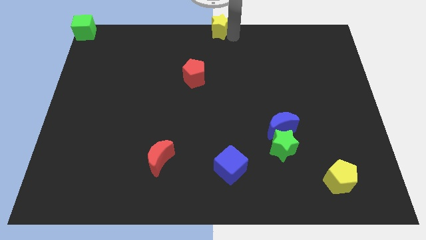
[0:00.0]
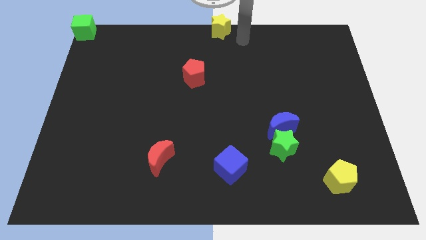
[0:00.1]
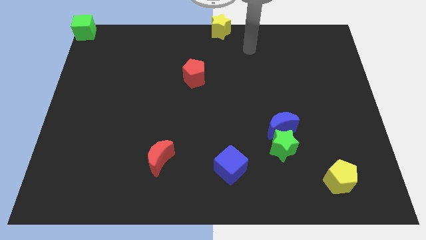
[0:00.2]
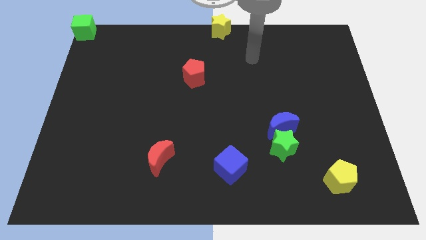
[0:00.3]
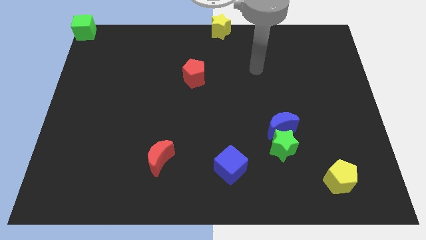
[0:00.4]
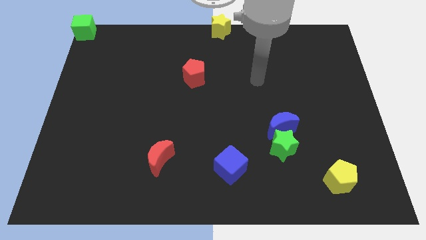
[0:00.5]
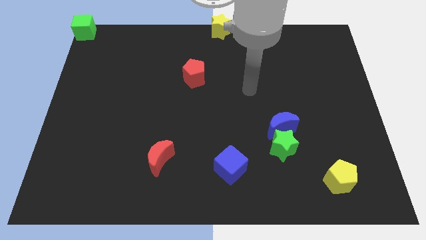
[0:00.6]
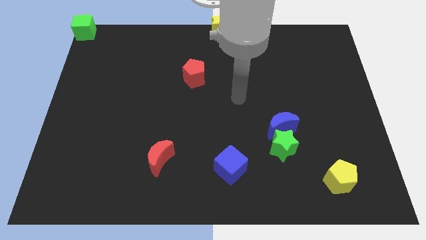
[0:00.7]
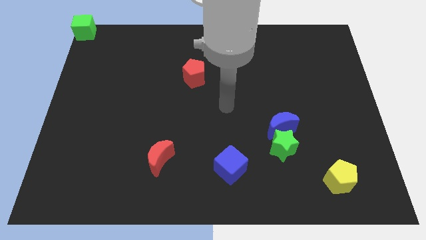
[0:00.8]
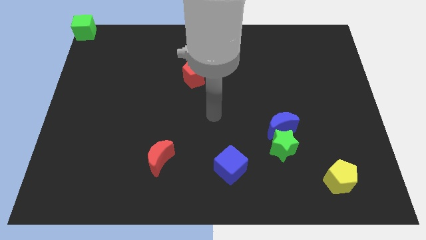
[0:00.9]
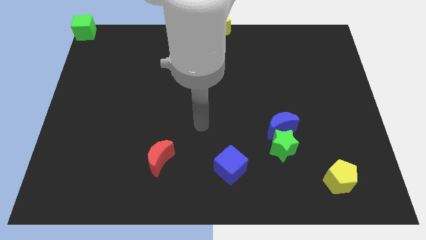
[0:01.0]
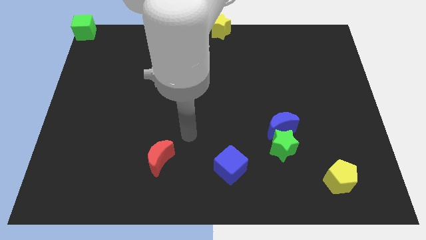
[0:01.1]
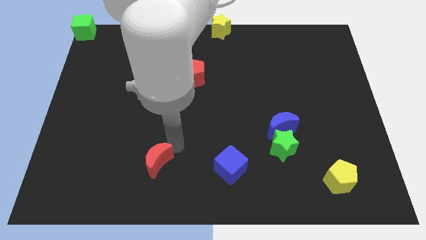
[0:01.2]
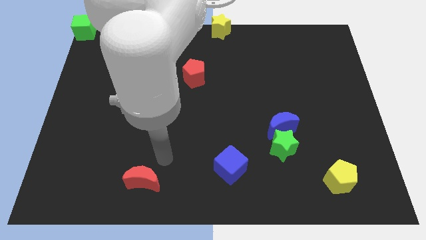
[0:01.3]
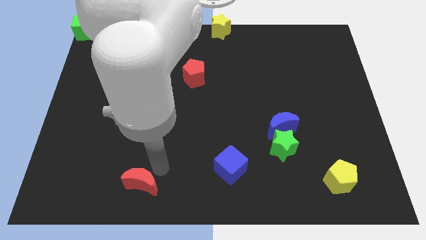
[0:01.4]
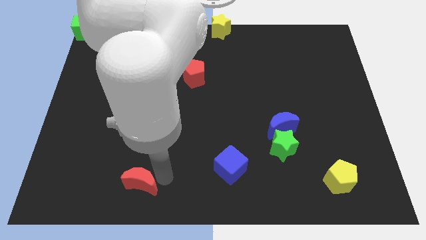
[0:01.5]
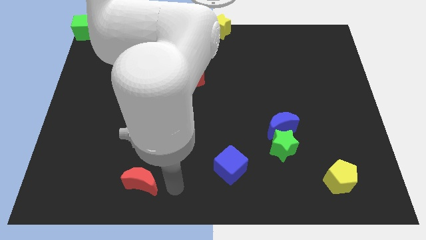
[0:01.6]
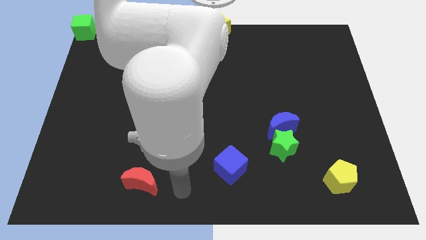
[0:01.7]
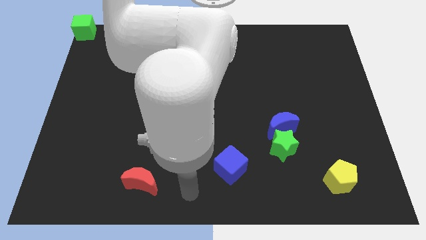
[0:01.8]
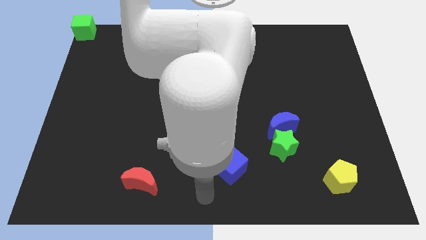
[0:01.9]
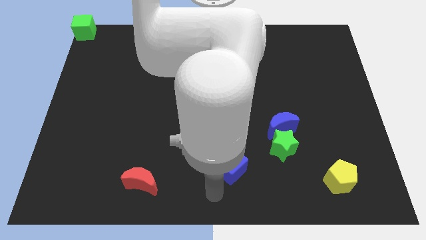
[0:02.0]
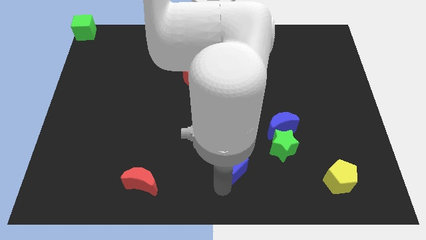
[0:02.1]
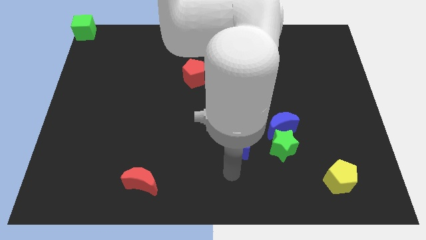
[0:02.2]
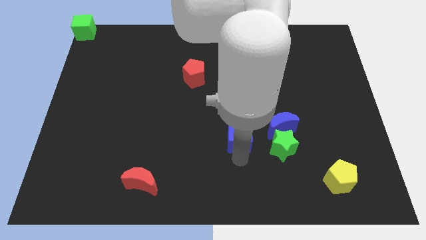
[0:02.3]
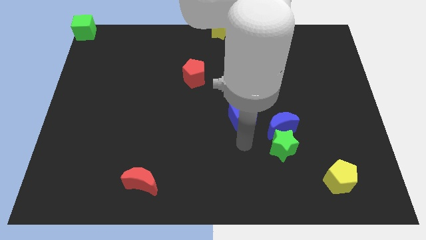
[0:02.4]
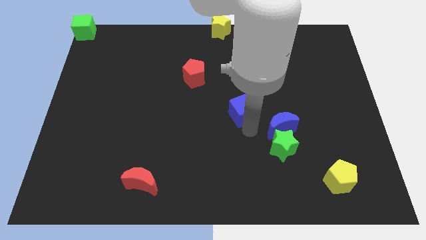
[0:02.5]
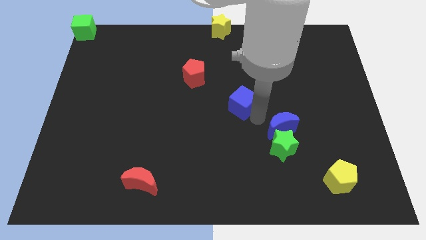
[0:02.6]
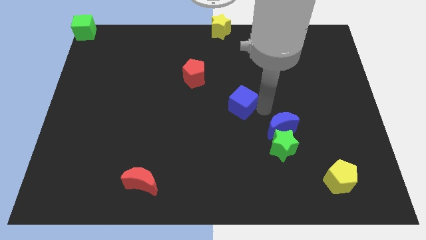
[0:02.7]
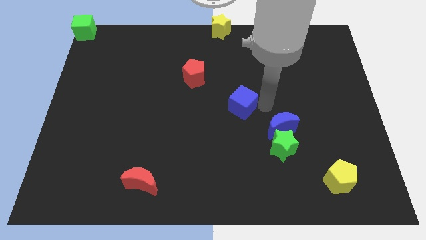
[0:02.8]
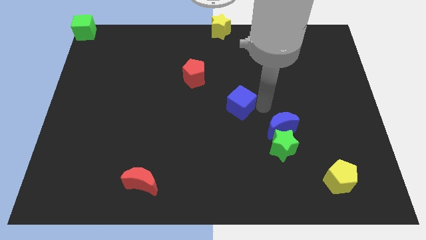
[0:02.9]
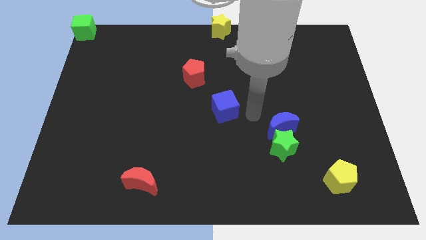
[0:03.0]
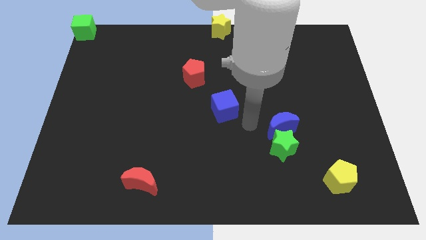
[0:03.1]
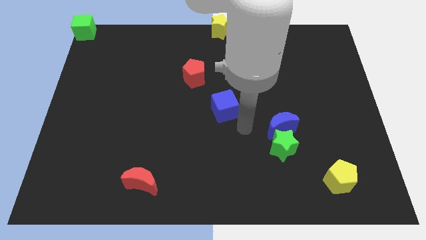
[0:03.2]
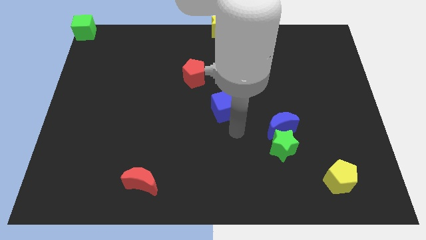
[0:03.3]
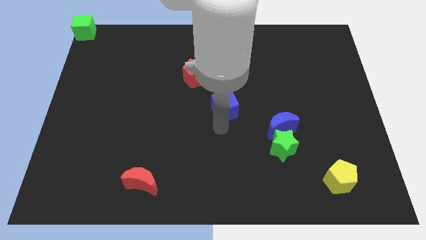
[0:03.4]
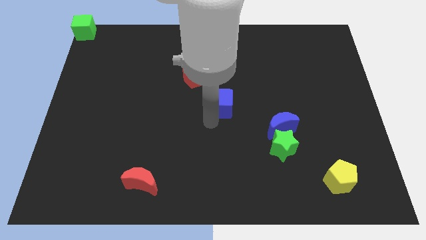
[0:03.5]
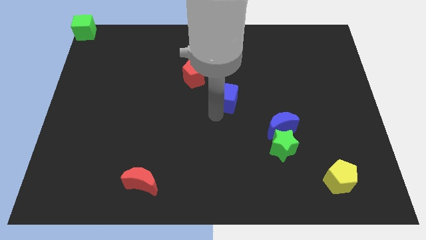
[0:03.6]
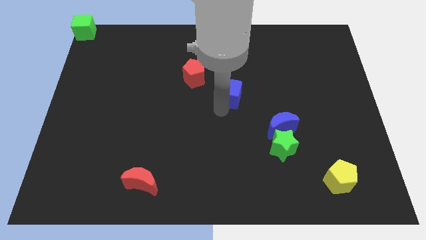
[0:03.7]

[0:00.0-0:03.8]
put the blue cube diagonally in between red pentagon and blue moon

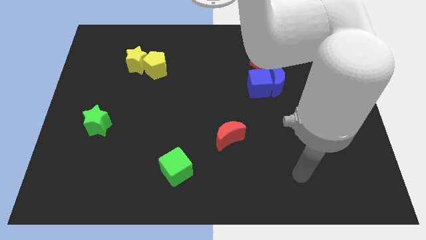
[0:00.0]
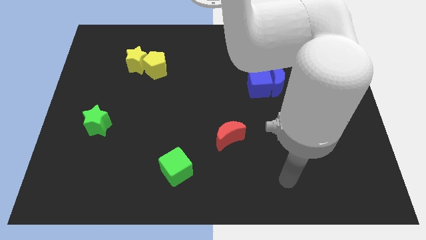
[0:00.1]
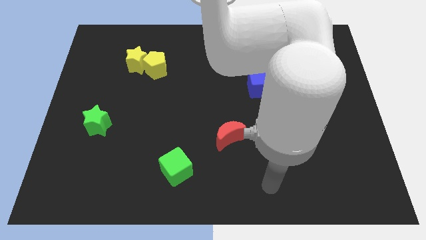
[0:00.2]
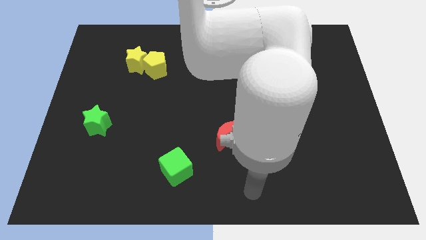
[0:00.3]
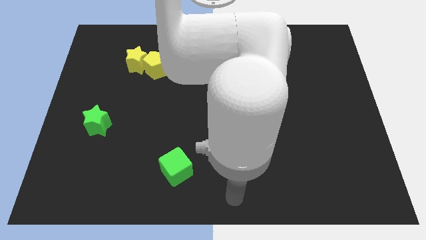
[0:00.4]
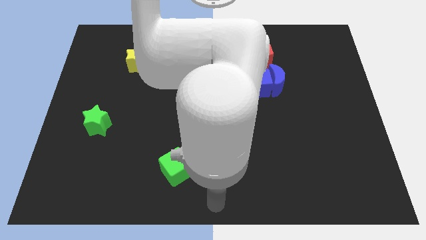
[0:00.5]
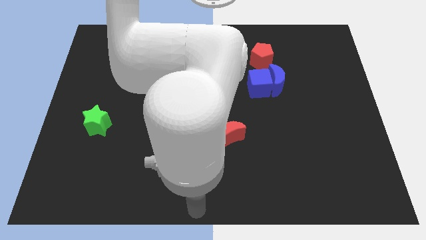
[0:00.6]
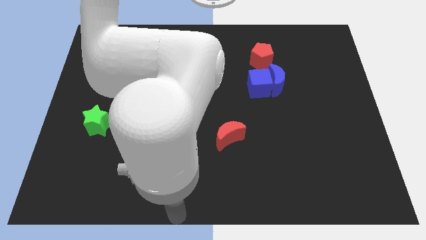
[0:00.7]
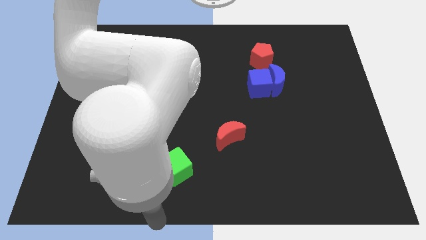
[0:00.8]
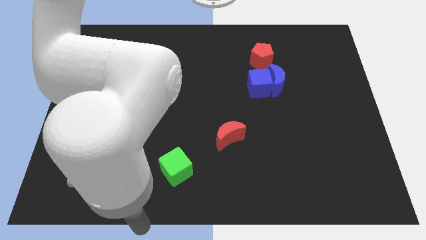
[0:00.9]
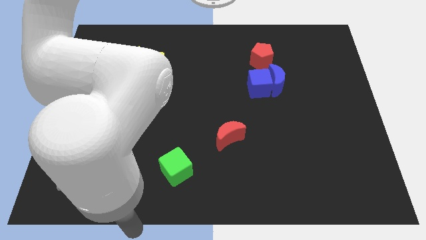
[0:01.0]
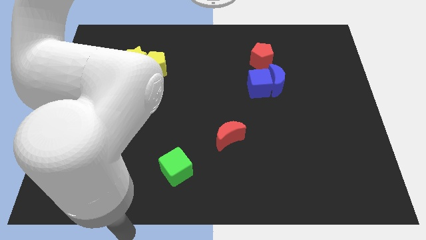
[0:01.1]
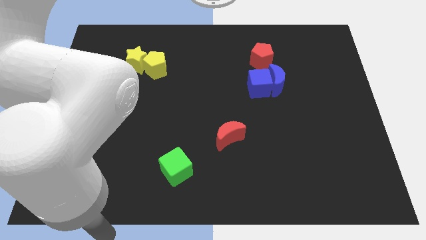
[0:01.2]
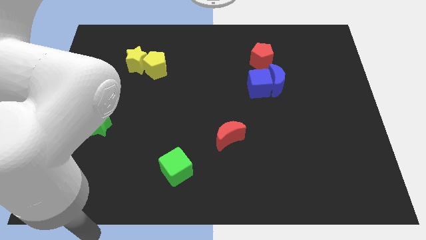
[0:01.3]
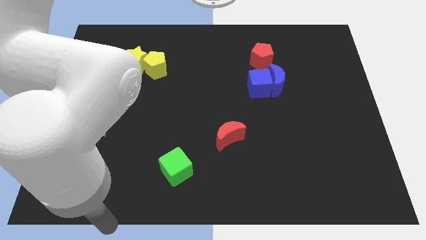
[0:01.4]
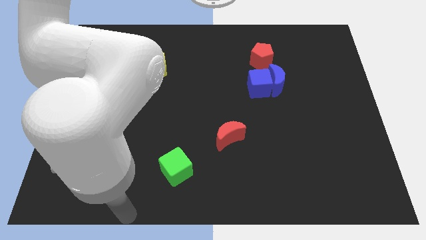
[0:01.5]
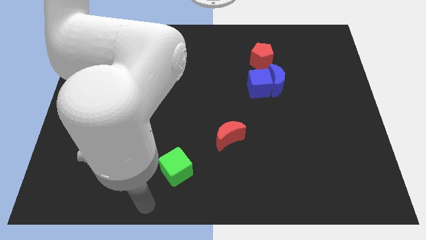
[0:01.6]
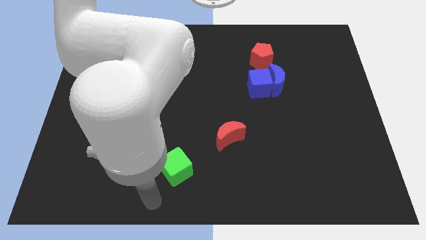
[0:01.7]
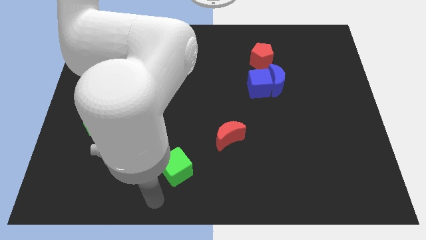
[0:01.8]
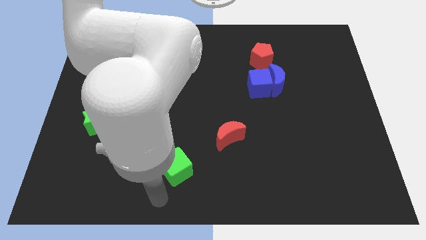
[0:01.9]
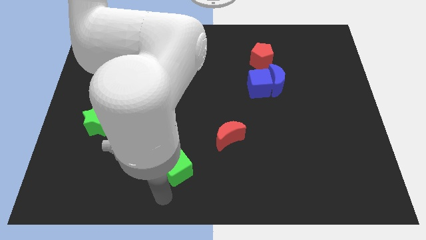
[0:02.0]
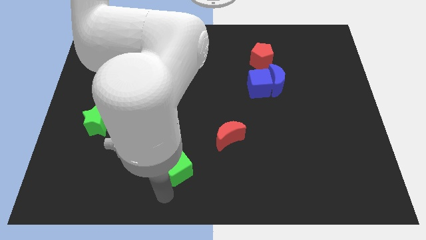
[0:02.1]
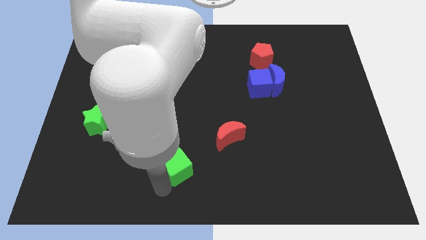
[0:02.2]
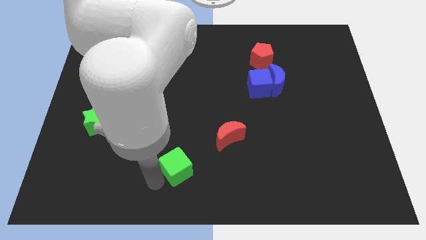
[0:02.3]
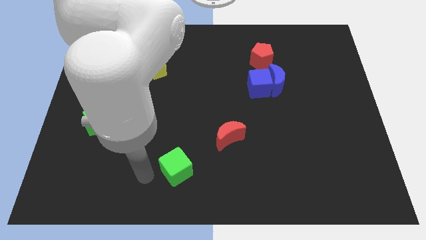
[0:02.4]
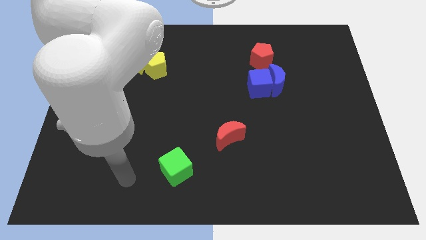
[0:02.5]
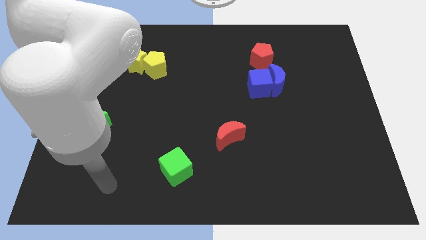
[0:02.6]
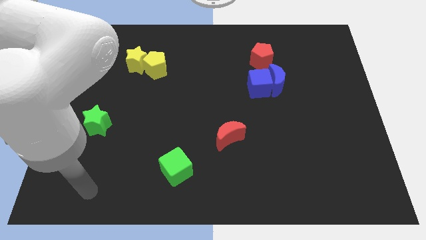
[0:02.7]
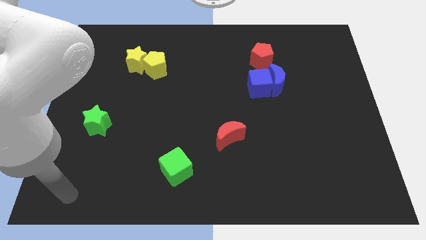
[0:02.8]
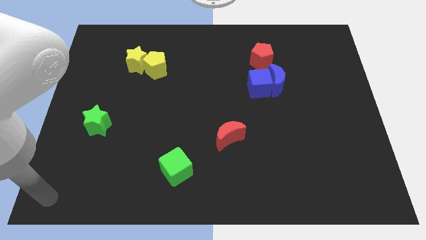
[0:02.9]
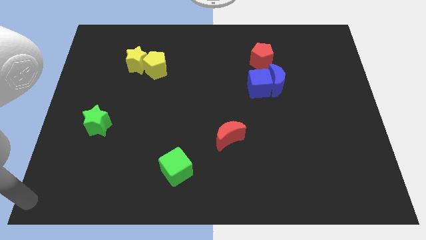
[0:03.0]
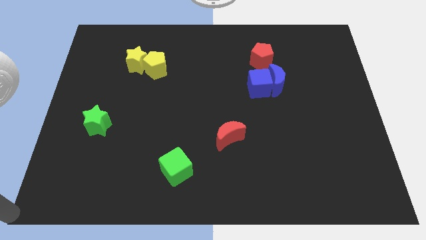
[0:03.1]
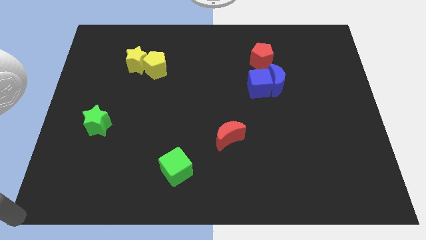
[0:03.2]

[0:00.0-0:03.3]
point your arm at the bottom left corner of the board

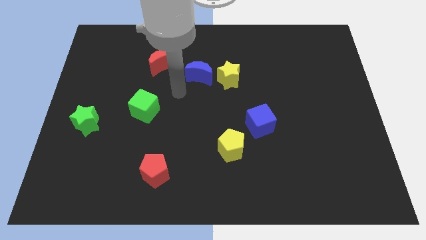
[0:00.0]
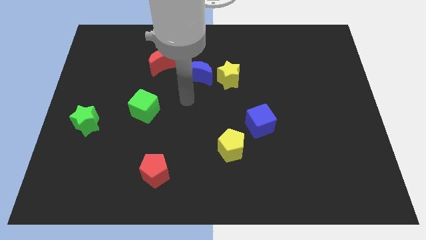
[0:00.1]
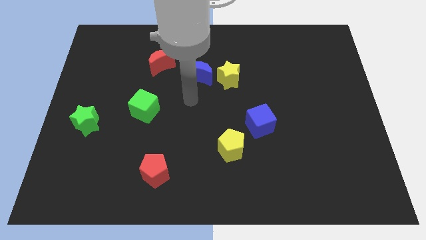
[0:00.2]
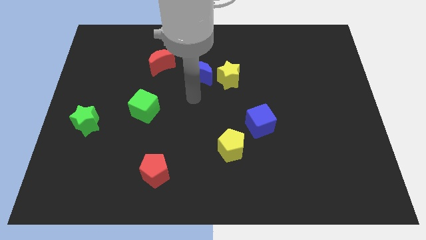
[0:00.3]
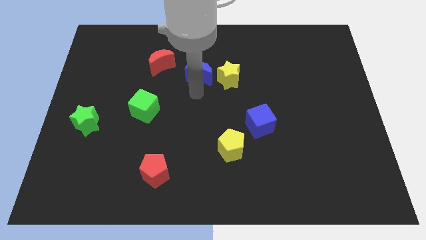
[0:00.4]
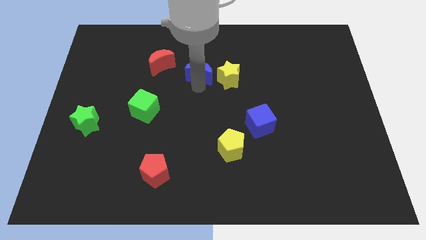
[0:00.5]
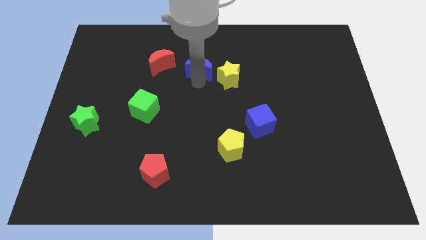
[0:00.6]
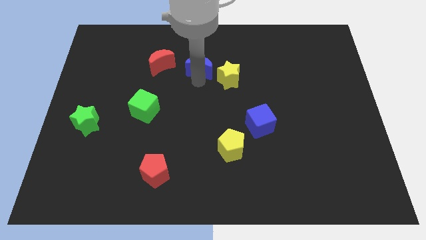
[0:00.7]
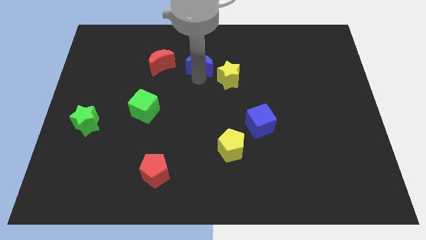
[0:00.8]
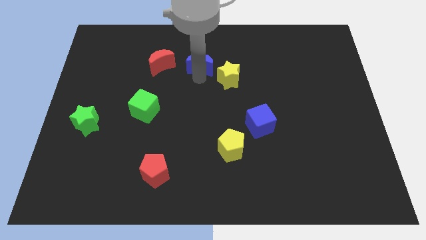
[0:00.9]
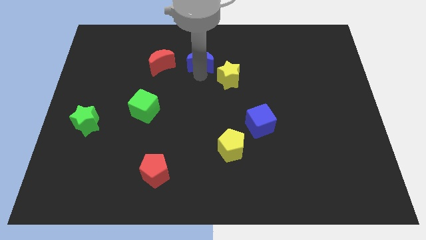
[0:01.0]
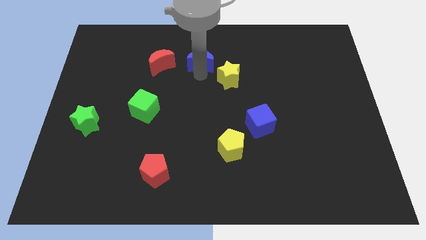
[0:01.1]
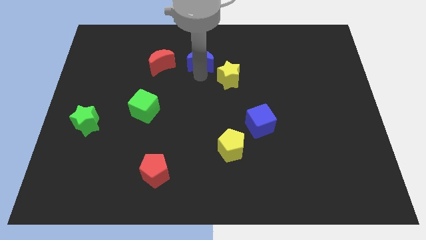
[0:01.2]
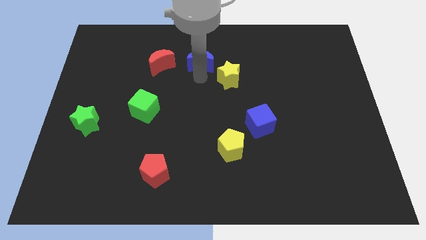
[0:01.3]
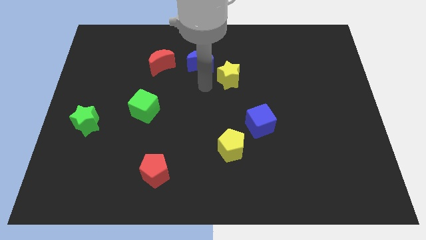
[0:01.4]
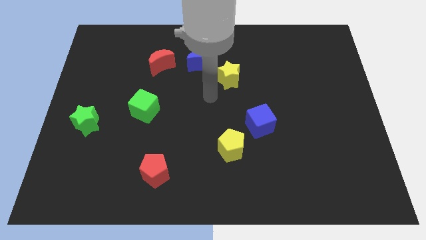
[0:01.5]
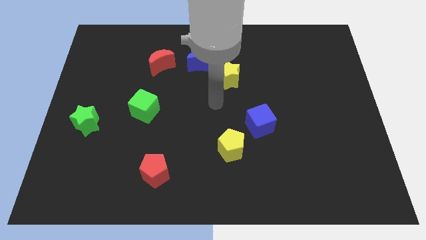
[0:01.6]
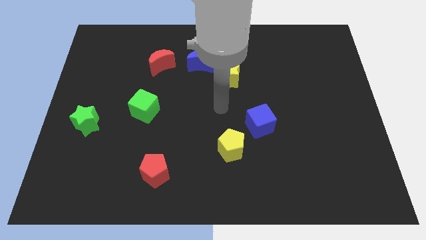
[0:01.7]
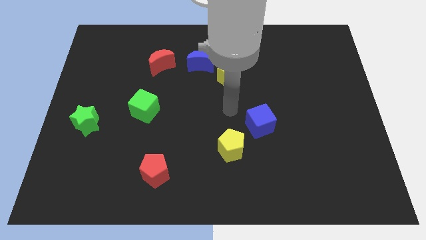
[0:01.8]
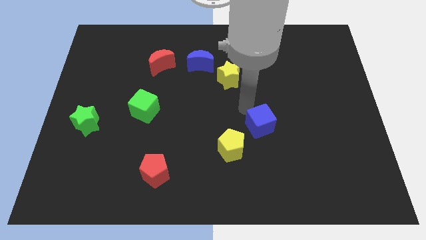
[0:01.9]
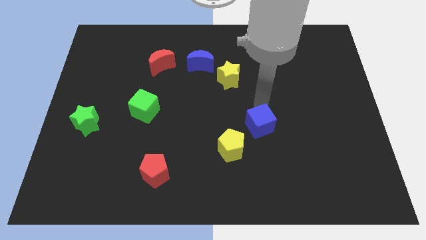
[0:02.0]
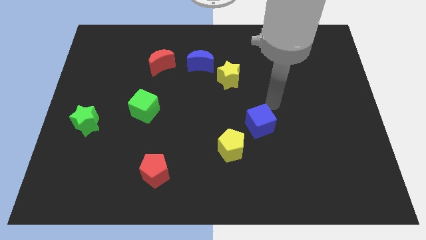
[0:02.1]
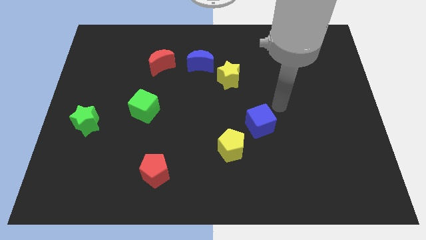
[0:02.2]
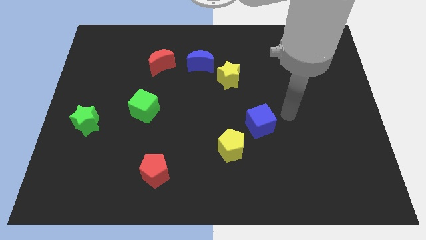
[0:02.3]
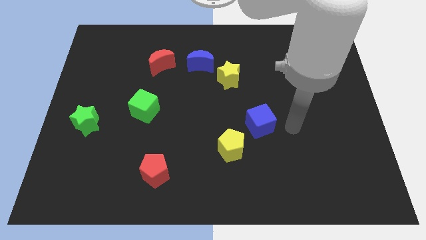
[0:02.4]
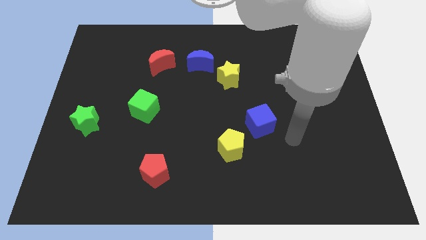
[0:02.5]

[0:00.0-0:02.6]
push blue moon slightly upwards
